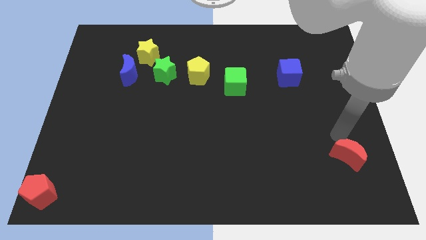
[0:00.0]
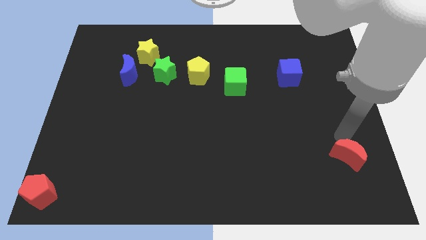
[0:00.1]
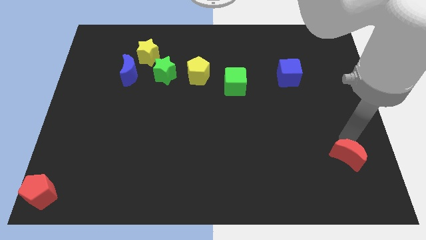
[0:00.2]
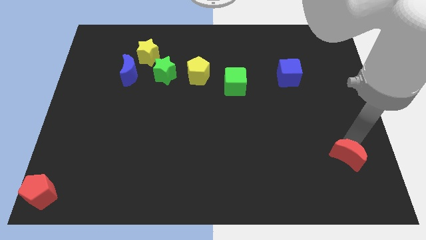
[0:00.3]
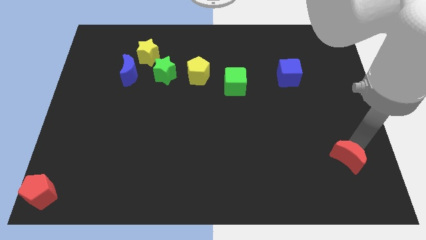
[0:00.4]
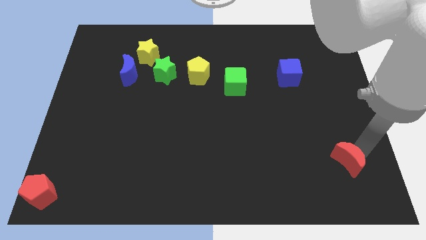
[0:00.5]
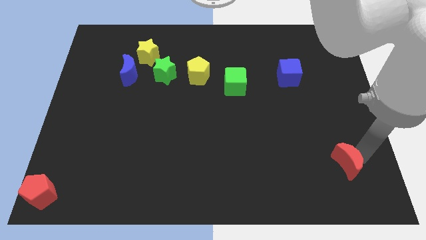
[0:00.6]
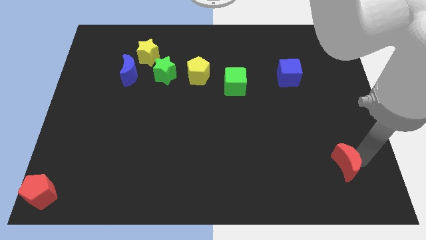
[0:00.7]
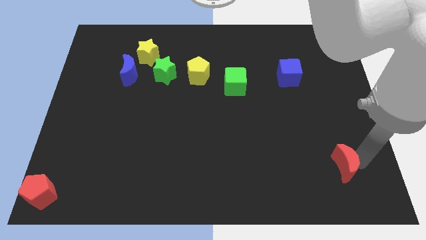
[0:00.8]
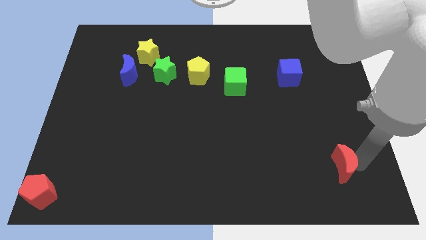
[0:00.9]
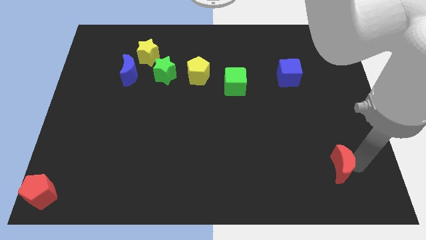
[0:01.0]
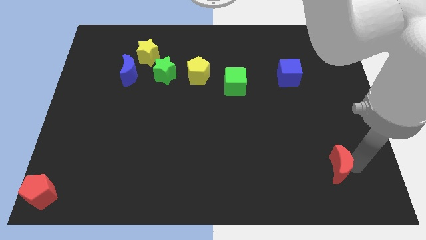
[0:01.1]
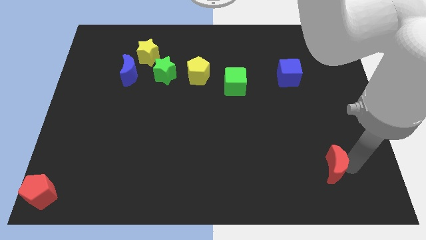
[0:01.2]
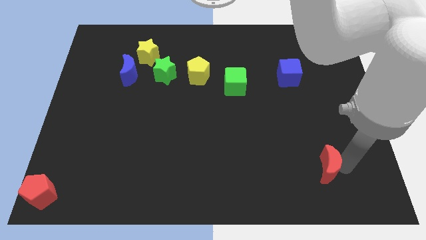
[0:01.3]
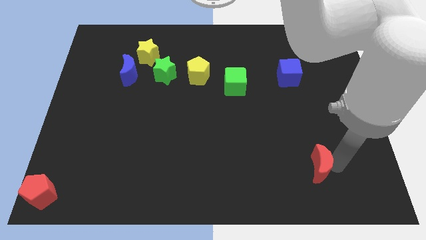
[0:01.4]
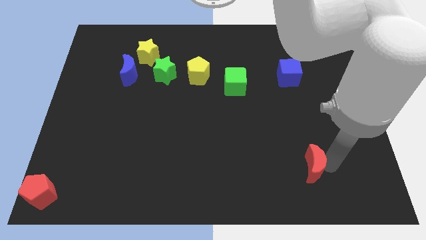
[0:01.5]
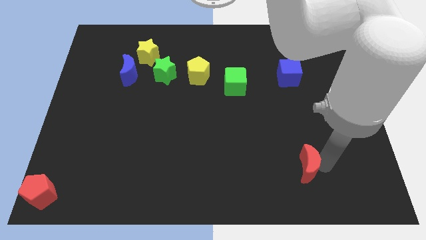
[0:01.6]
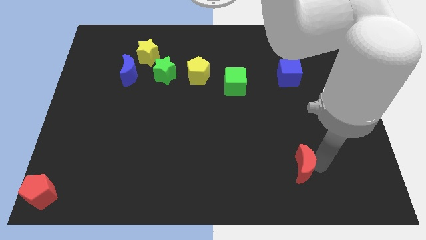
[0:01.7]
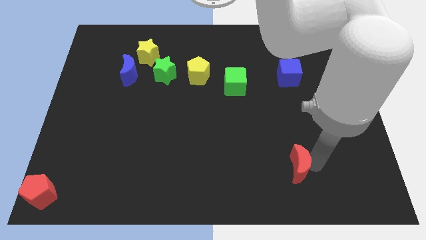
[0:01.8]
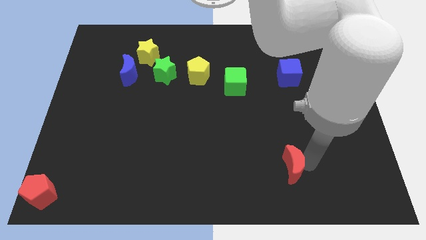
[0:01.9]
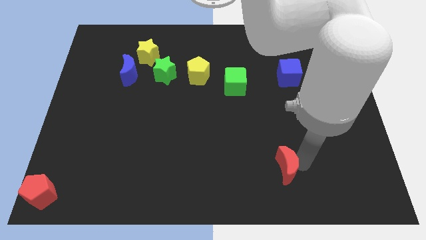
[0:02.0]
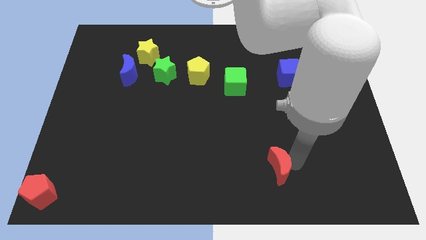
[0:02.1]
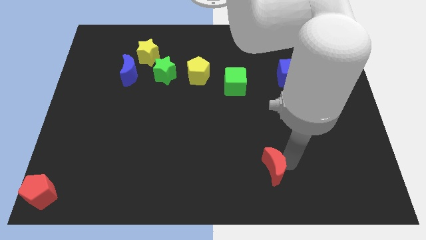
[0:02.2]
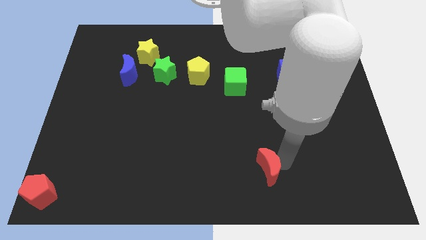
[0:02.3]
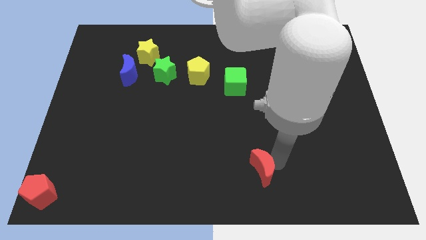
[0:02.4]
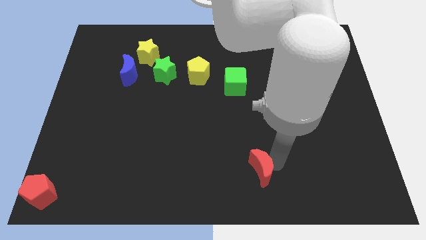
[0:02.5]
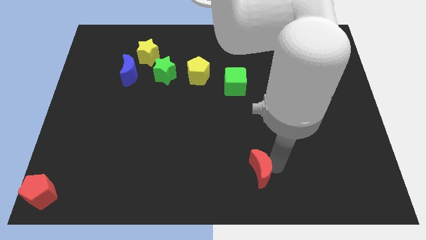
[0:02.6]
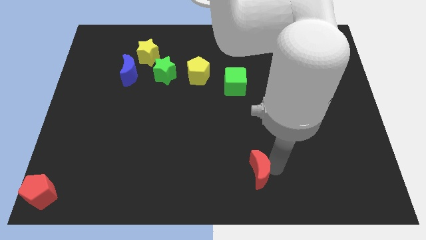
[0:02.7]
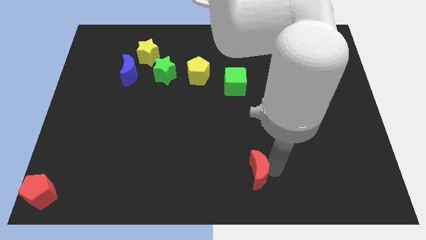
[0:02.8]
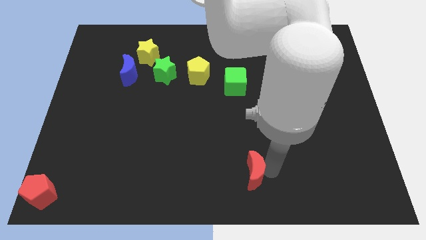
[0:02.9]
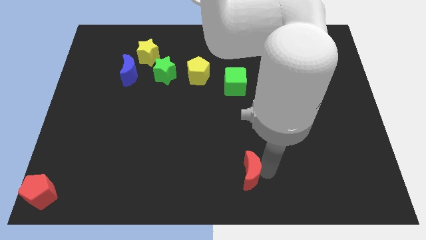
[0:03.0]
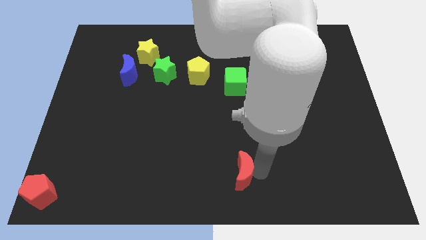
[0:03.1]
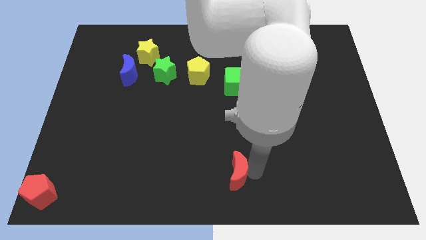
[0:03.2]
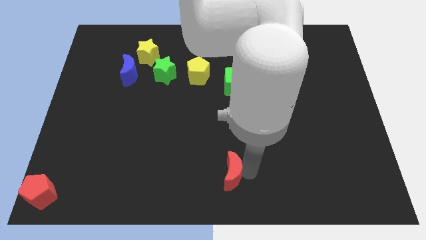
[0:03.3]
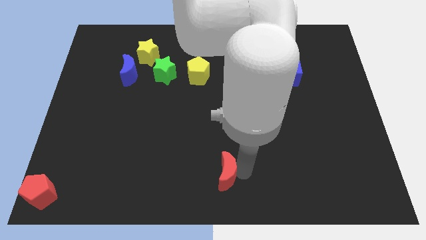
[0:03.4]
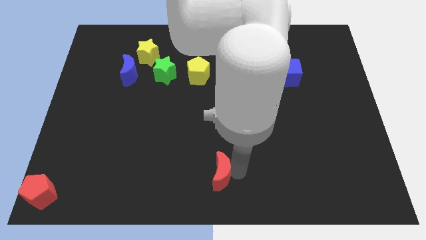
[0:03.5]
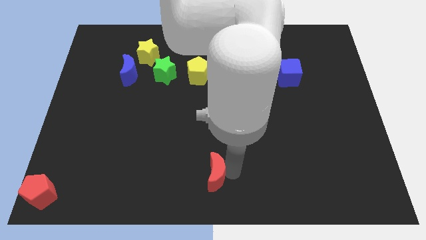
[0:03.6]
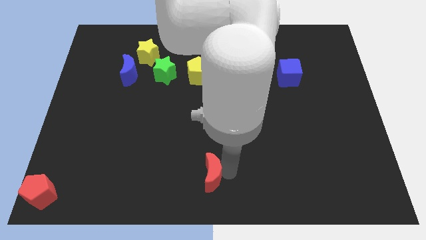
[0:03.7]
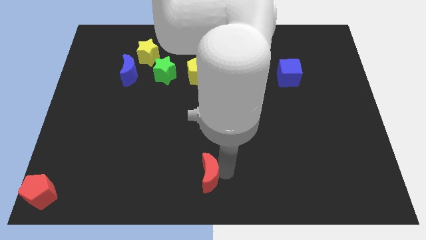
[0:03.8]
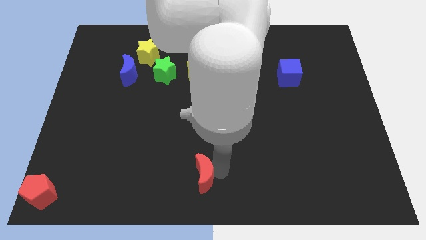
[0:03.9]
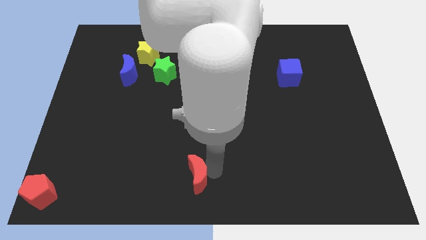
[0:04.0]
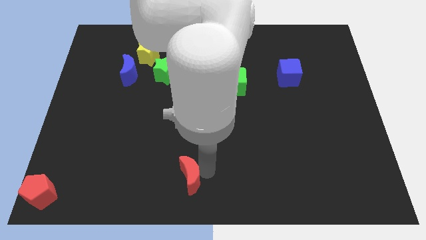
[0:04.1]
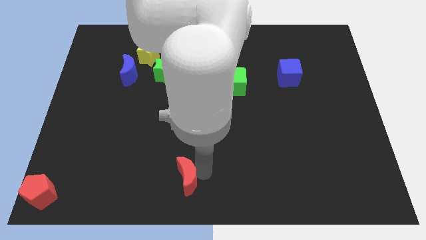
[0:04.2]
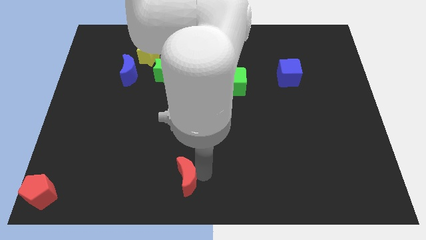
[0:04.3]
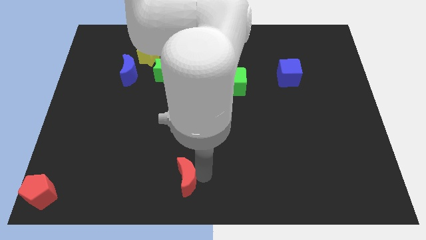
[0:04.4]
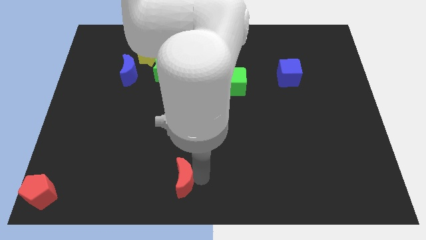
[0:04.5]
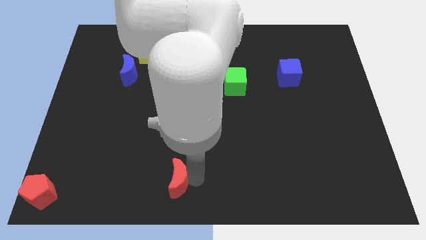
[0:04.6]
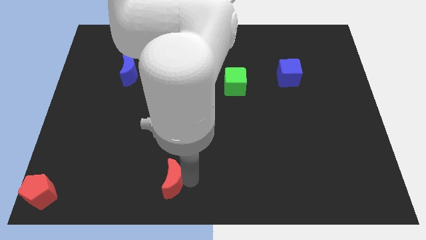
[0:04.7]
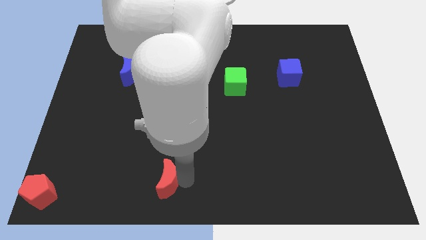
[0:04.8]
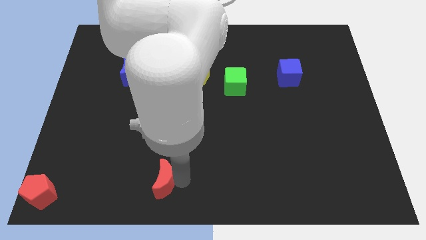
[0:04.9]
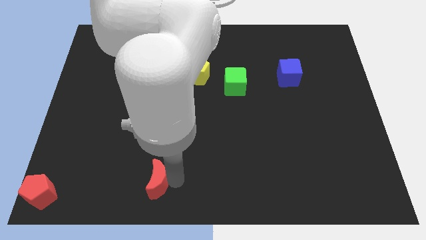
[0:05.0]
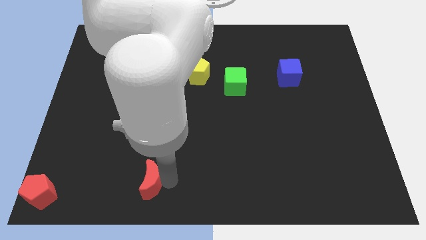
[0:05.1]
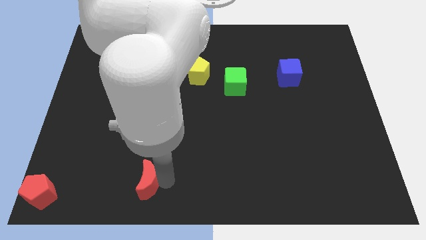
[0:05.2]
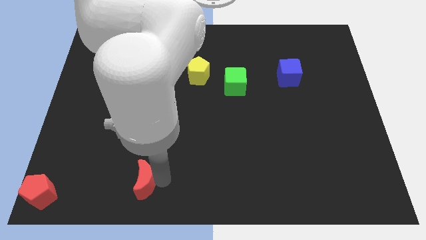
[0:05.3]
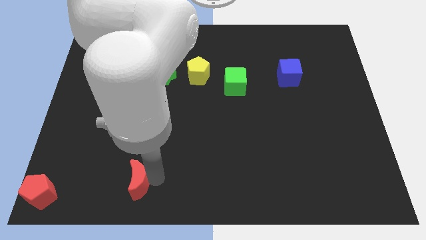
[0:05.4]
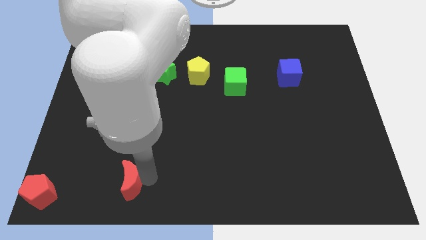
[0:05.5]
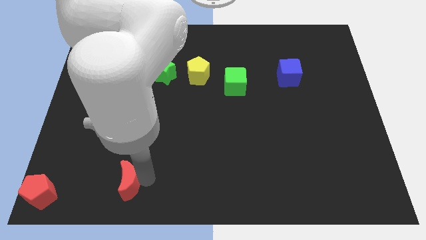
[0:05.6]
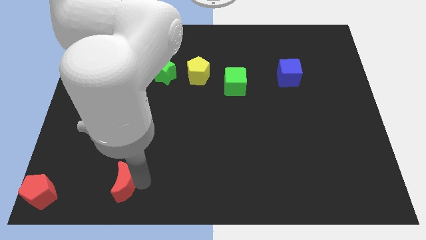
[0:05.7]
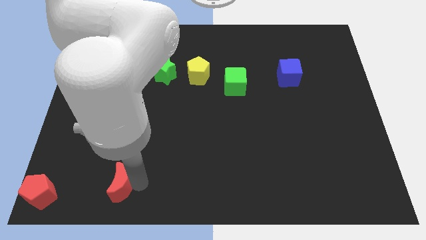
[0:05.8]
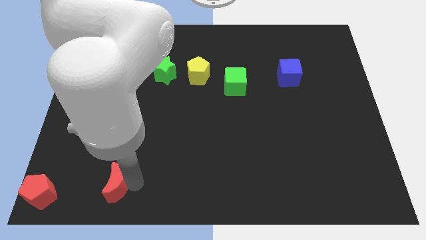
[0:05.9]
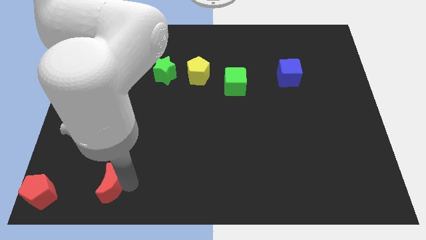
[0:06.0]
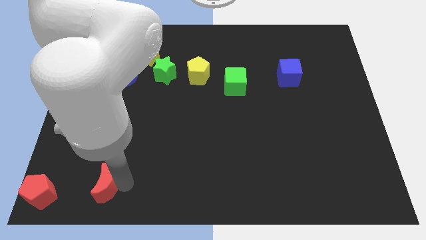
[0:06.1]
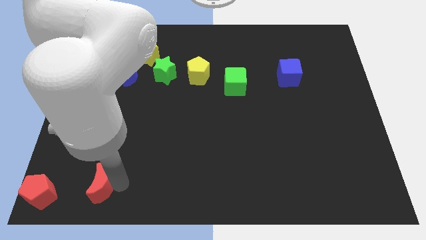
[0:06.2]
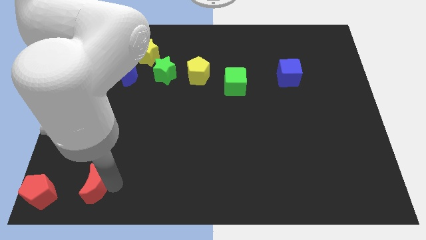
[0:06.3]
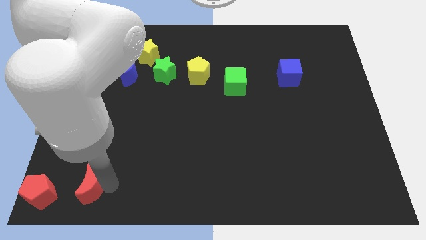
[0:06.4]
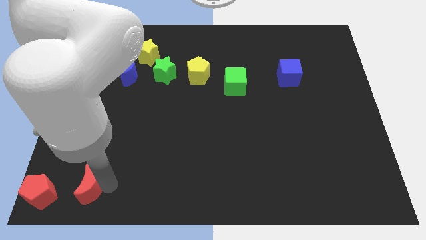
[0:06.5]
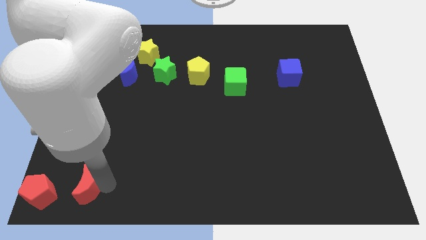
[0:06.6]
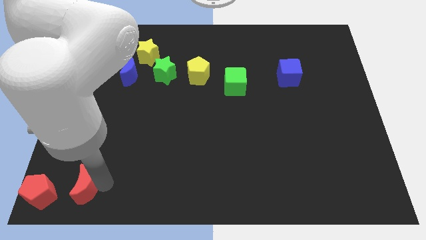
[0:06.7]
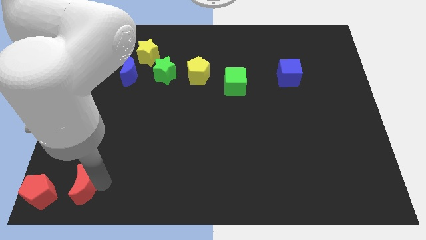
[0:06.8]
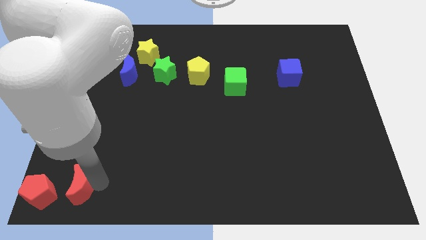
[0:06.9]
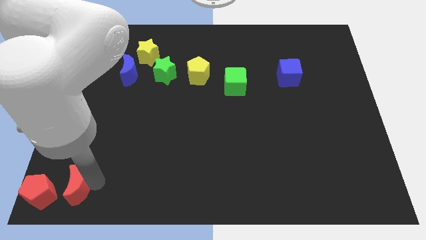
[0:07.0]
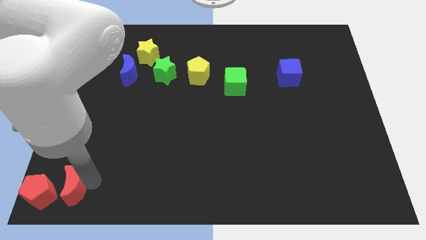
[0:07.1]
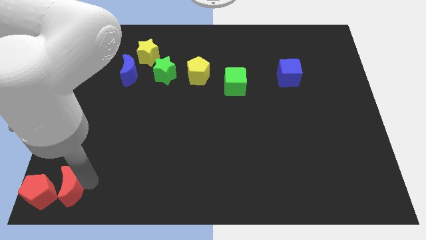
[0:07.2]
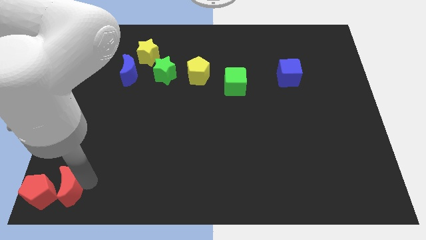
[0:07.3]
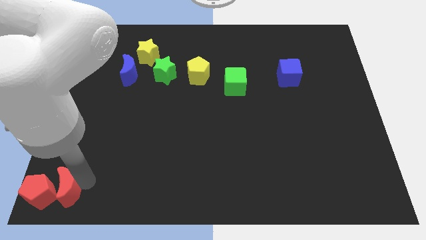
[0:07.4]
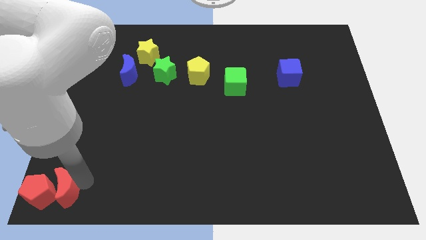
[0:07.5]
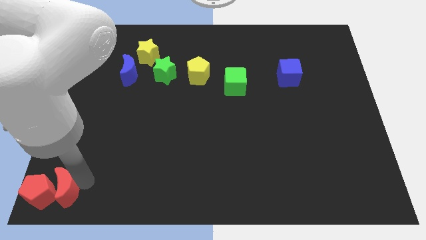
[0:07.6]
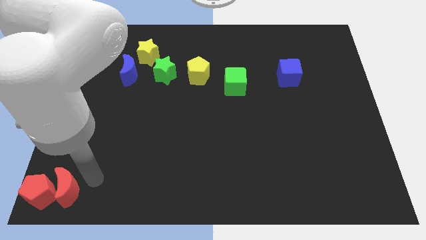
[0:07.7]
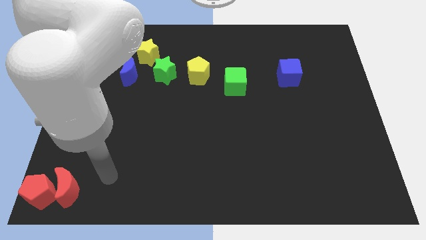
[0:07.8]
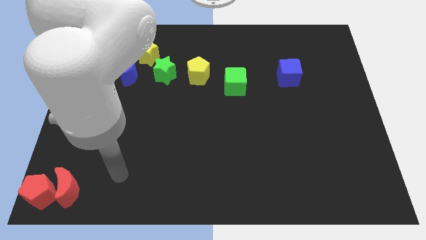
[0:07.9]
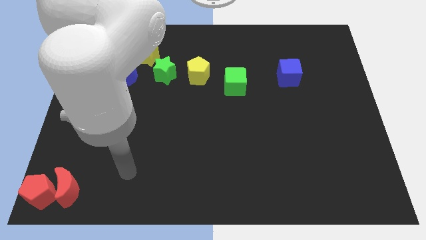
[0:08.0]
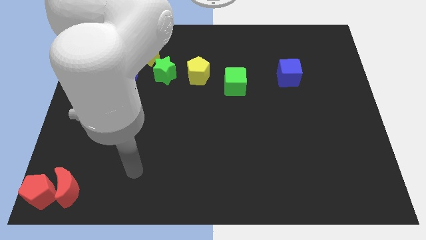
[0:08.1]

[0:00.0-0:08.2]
push the red crescent towards the bottom left corner

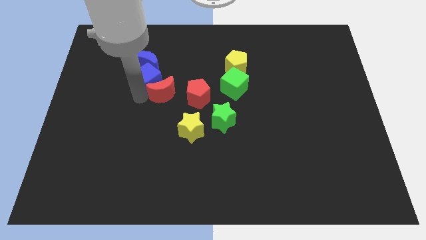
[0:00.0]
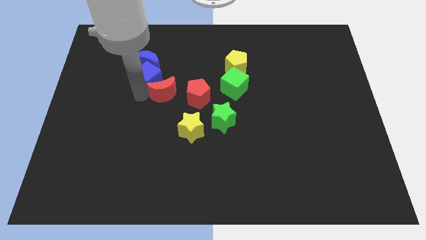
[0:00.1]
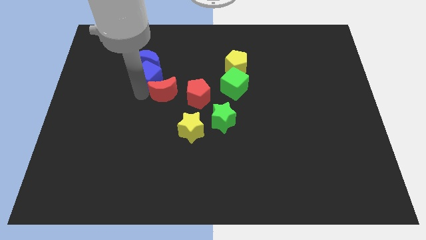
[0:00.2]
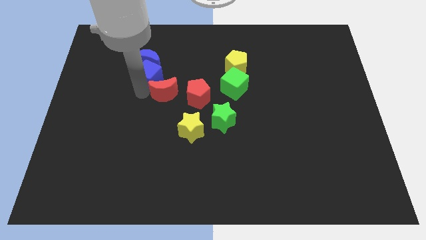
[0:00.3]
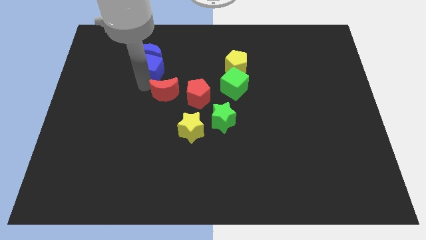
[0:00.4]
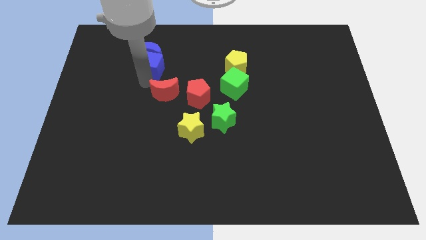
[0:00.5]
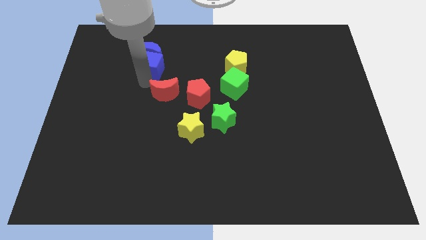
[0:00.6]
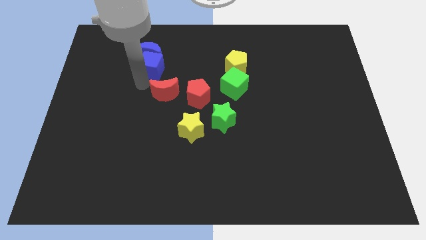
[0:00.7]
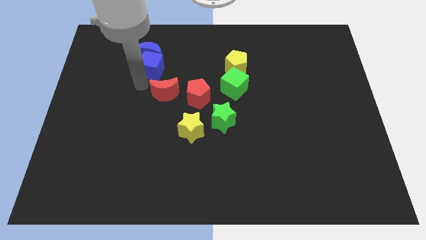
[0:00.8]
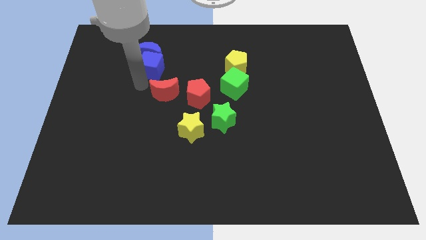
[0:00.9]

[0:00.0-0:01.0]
push the blue cube into the blue moon
